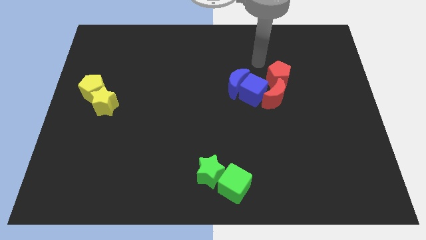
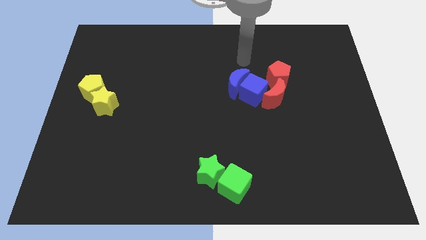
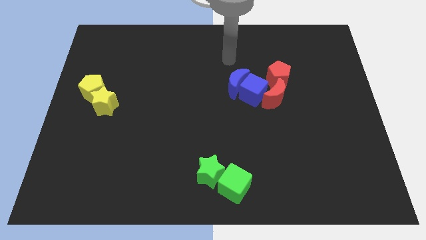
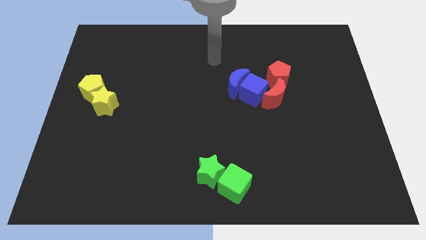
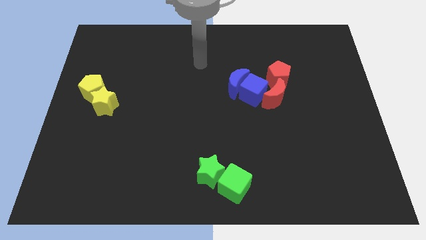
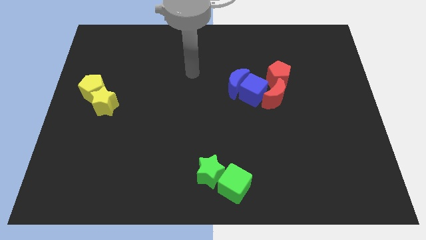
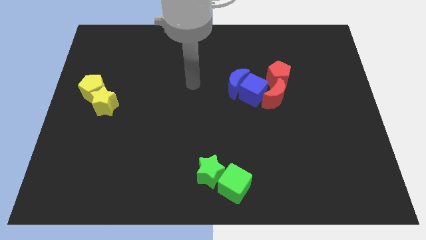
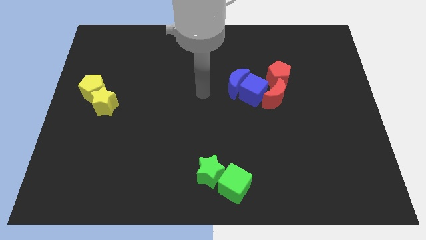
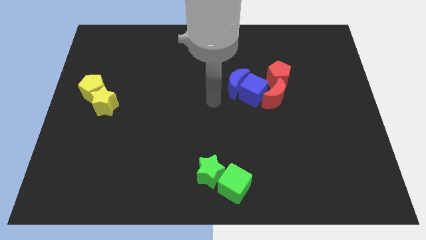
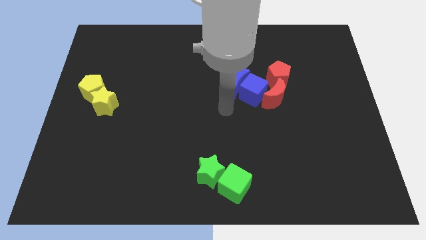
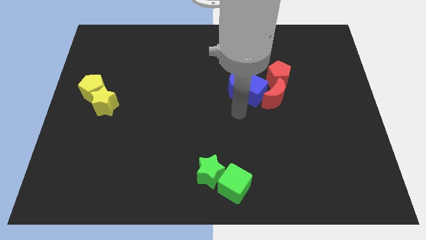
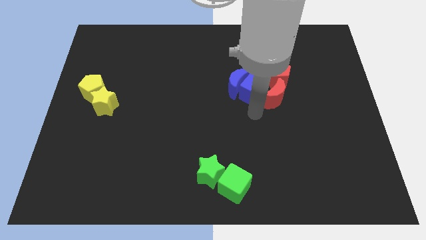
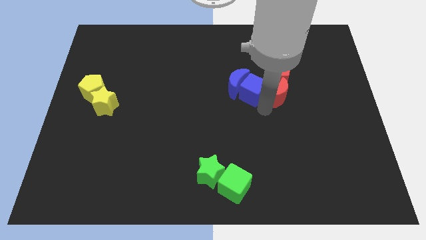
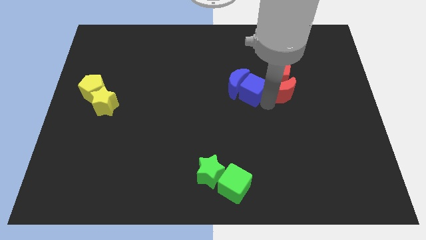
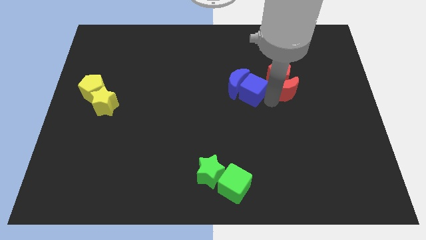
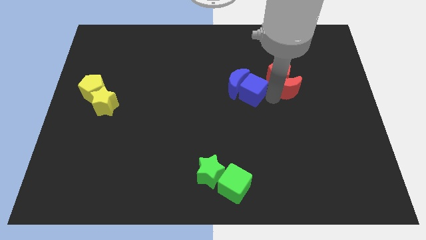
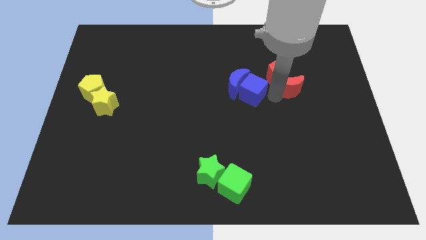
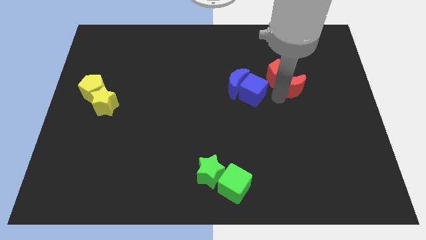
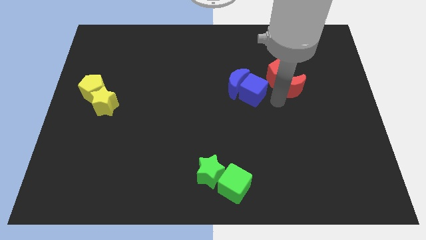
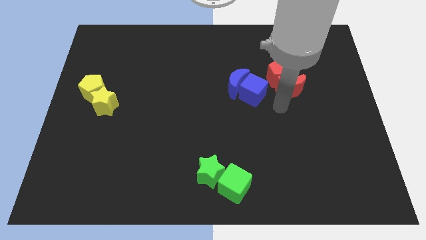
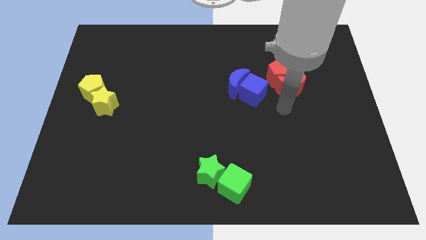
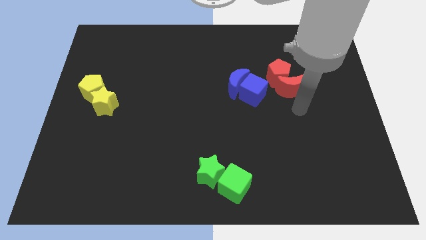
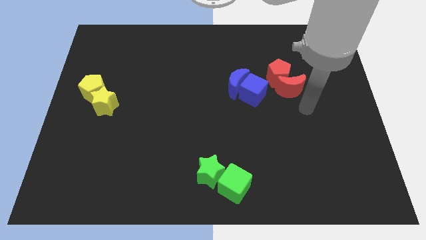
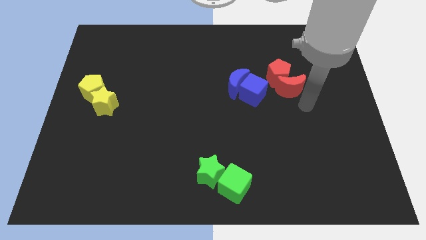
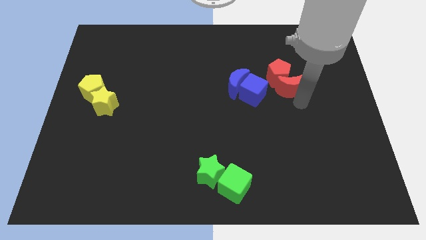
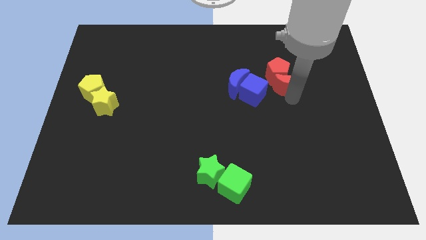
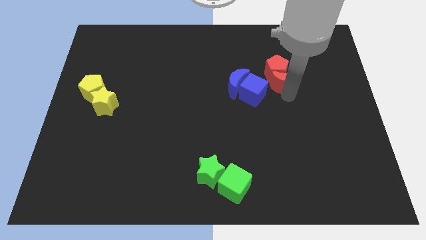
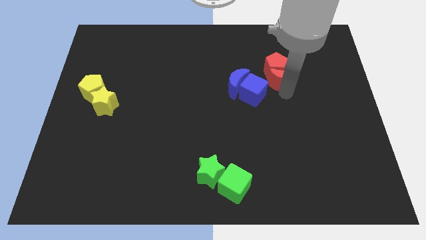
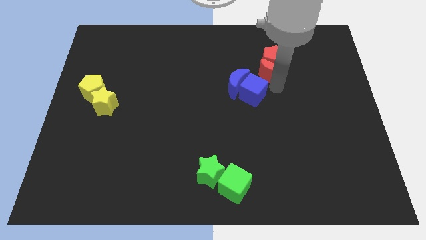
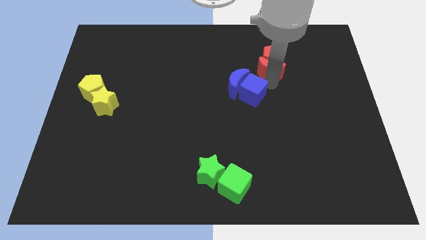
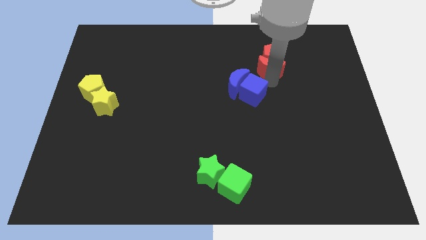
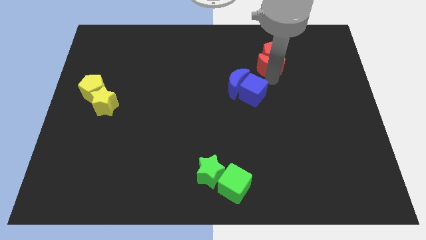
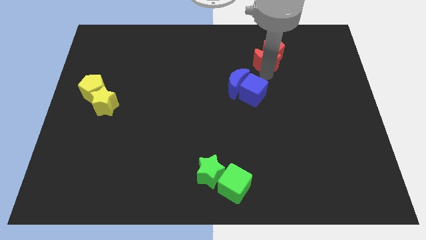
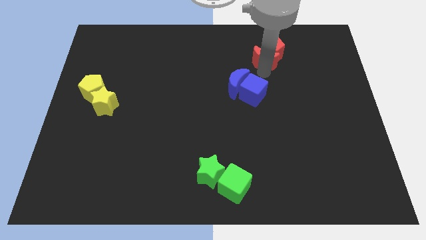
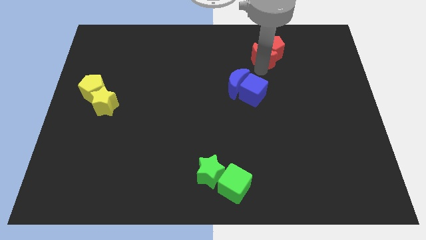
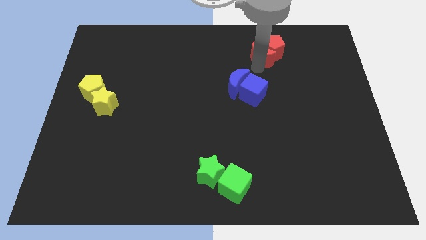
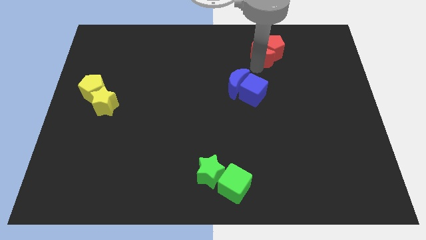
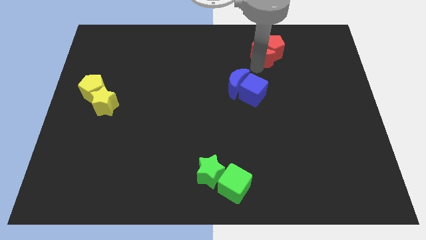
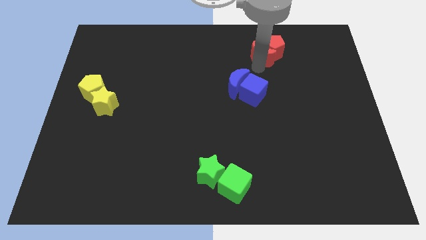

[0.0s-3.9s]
move red crescent into red pentagon

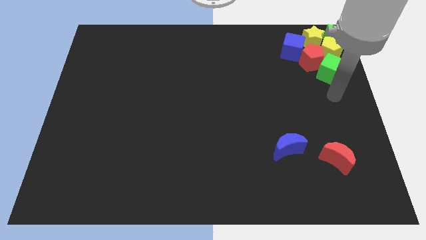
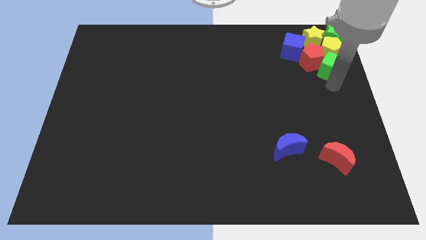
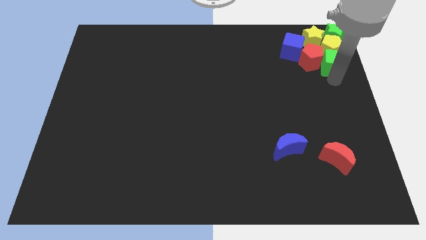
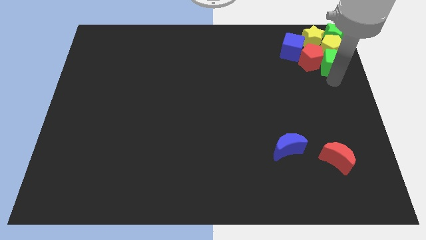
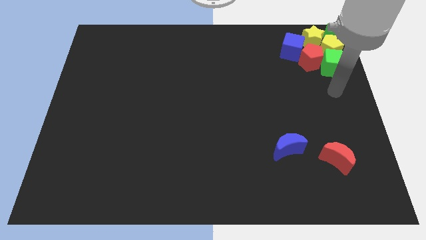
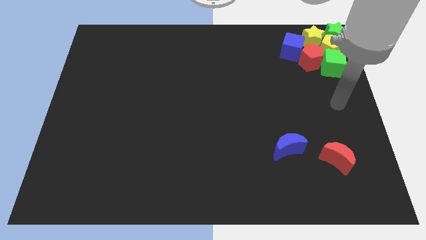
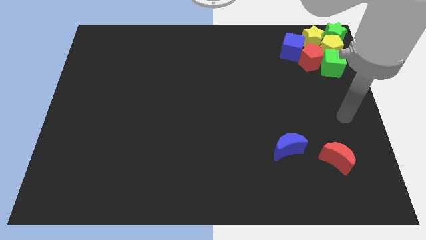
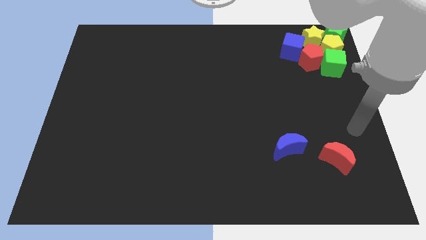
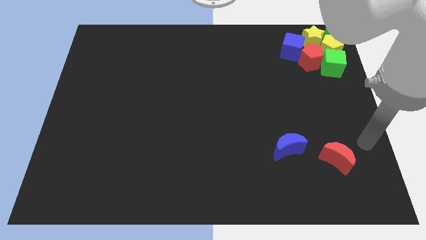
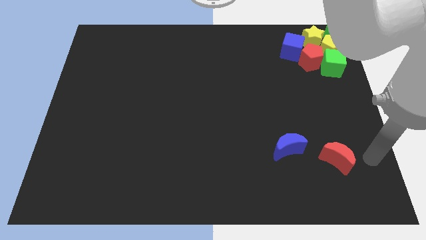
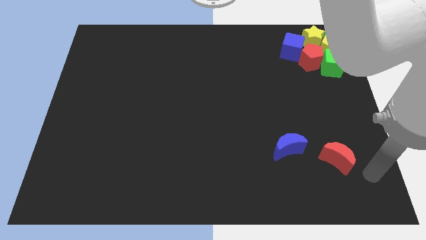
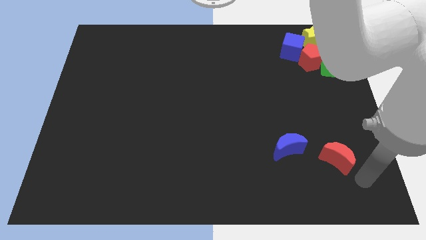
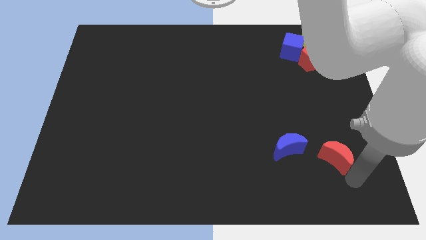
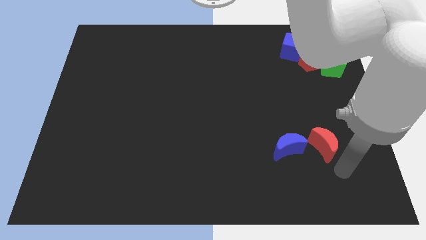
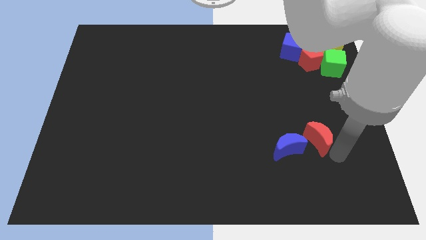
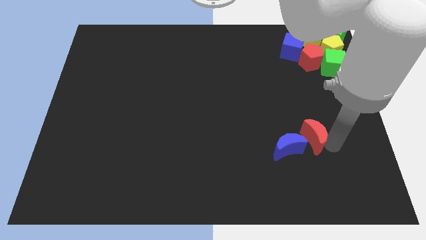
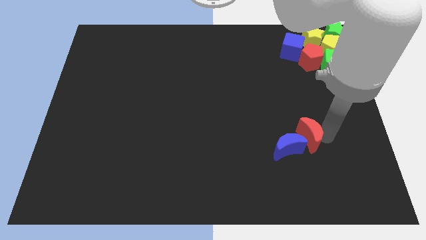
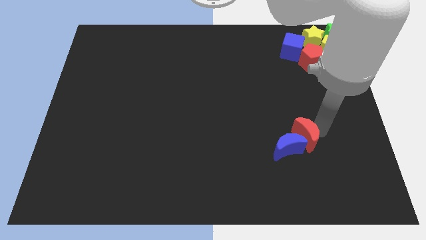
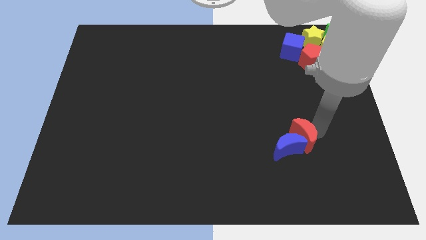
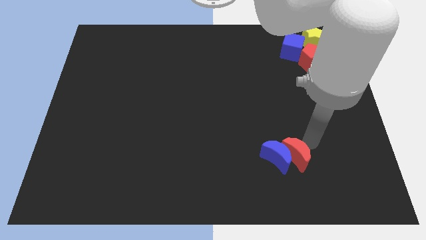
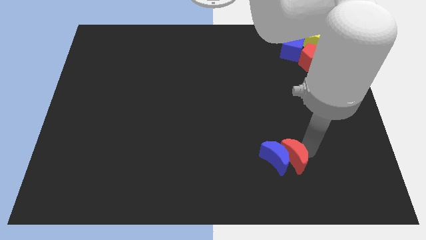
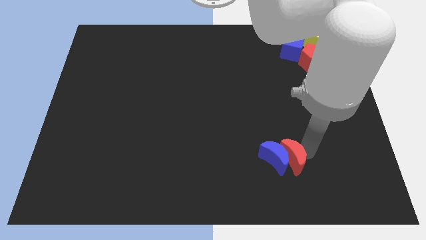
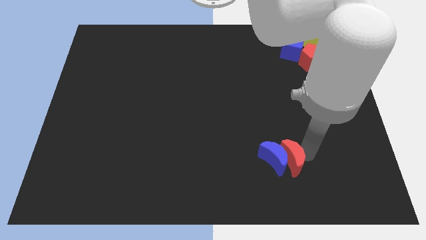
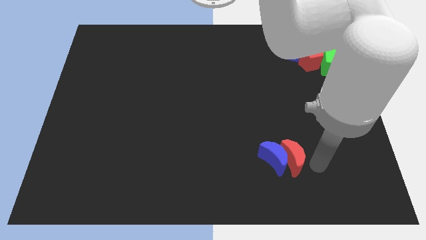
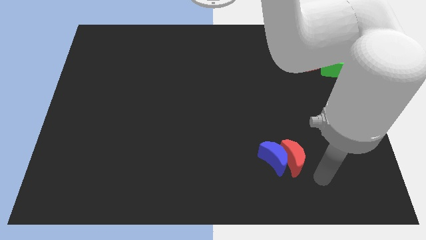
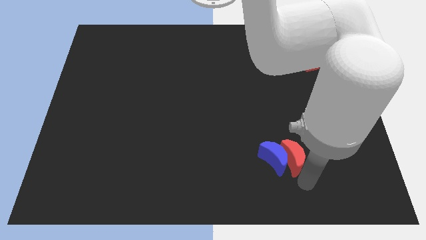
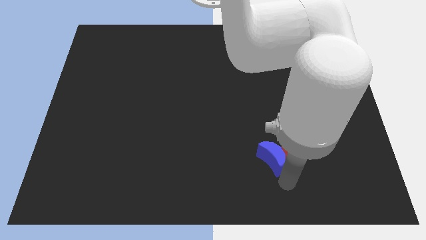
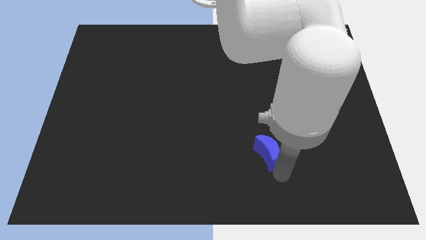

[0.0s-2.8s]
push the red moon into the blue crescent

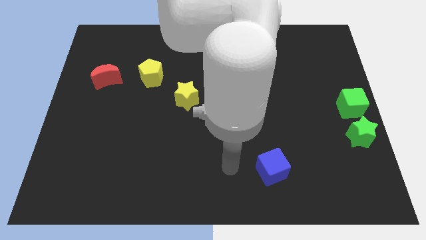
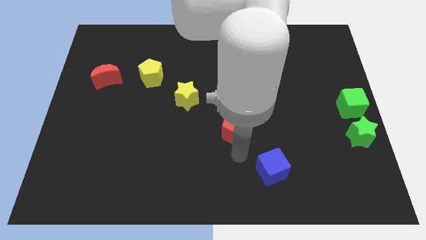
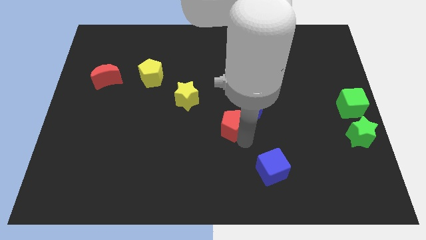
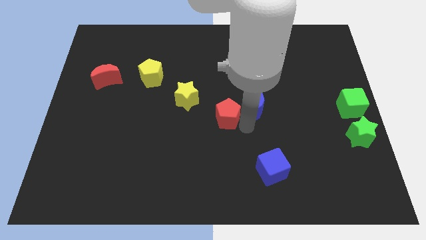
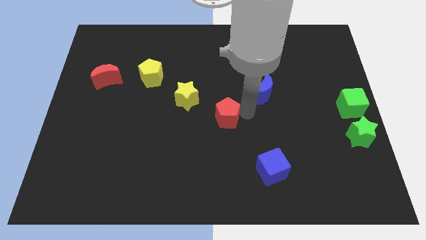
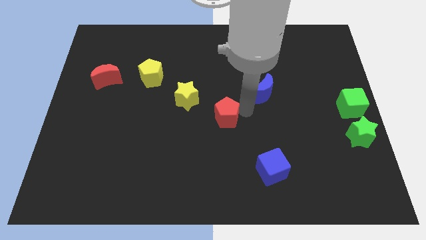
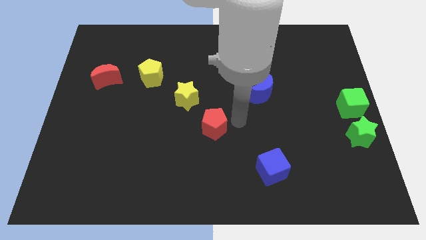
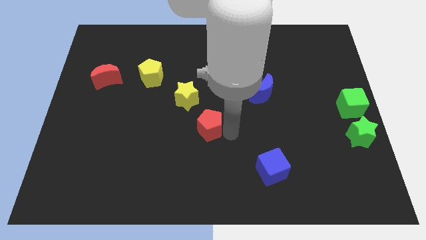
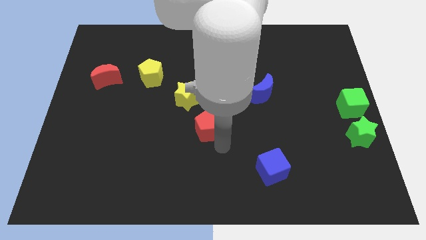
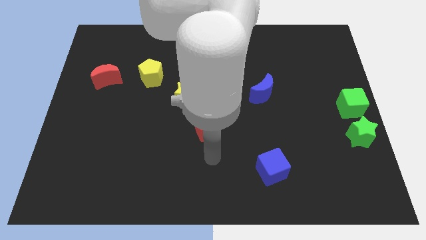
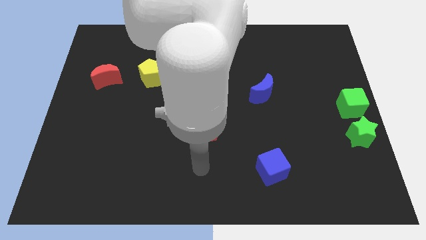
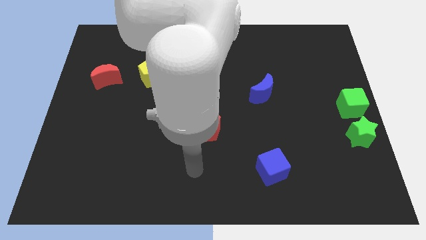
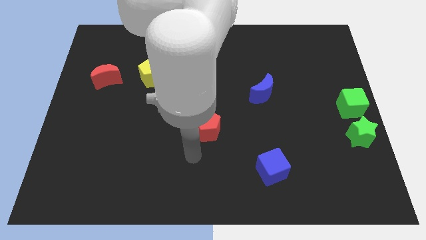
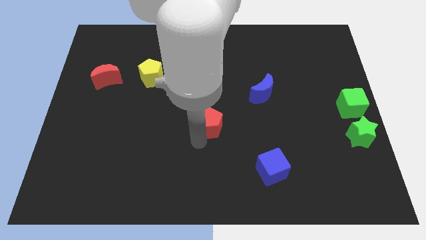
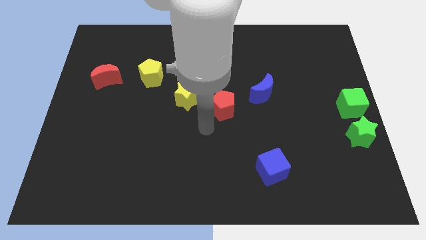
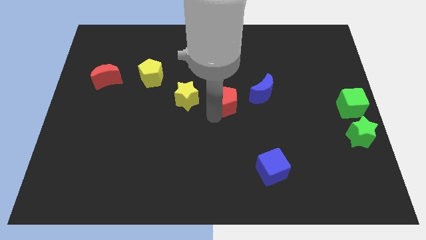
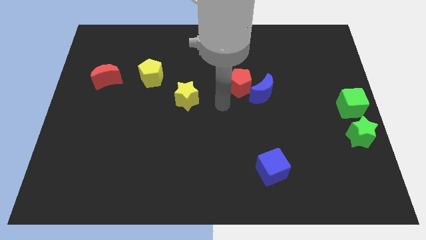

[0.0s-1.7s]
move the red pentagon to the left side of the blue moon

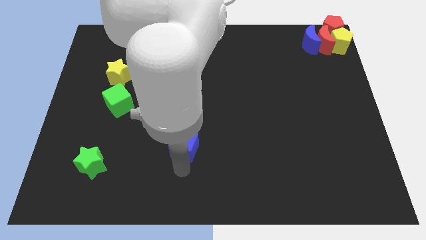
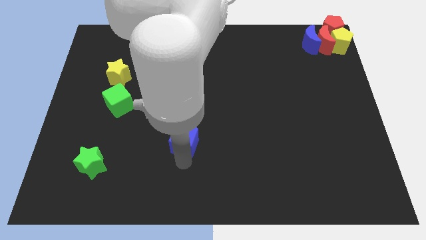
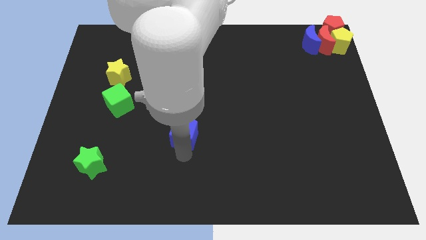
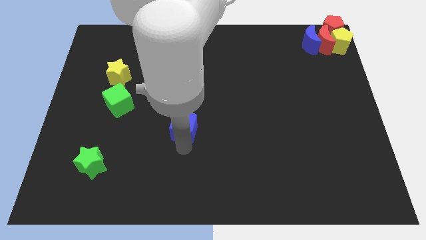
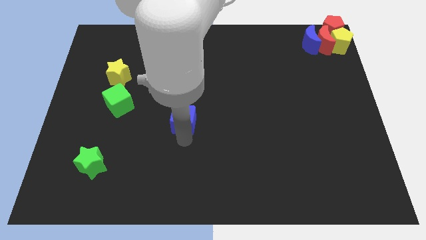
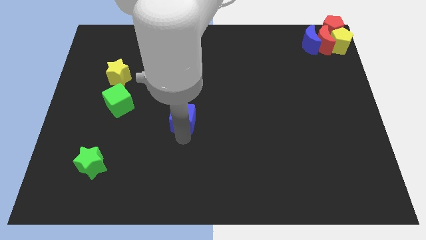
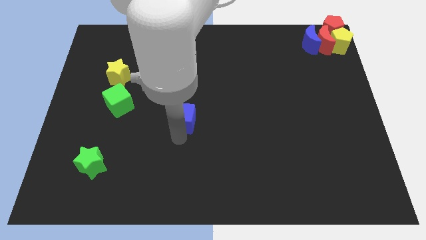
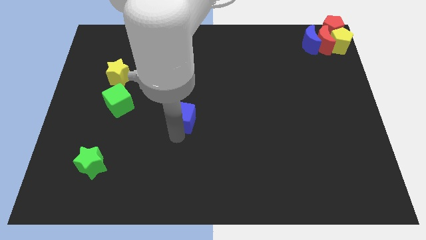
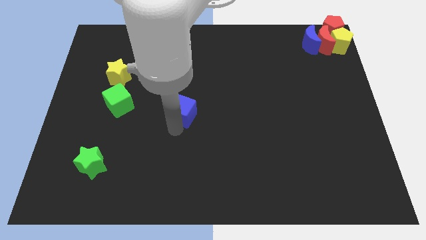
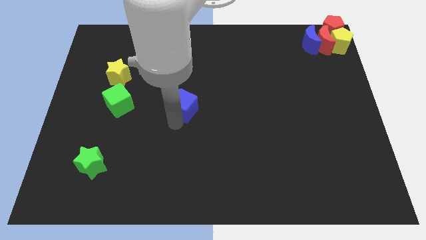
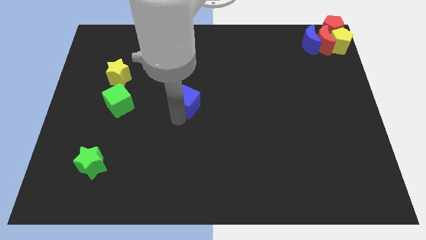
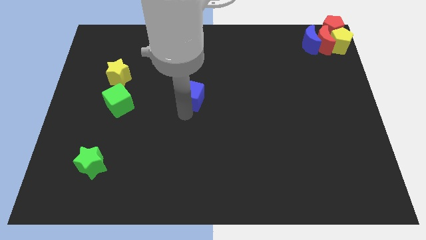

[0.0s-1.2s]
put the blue cube to the right side of the green cube
